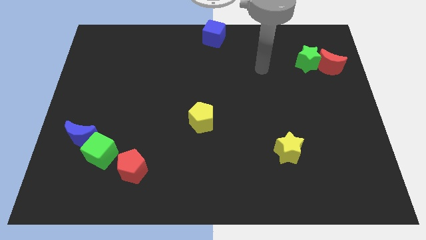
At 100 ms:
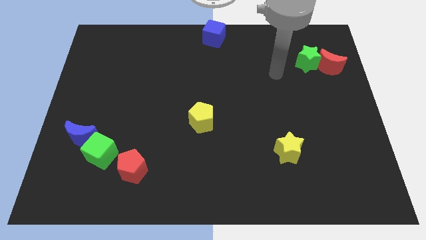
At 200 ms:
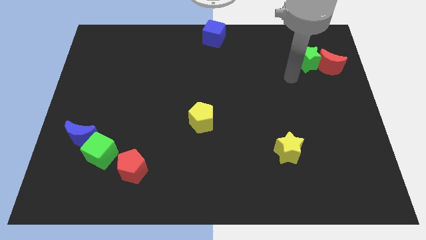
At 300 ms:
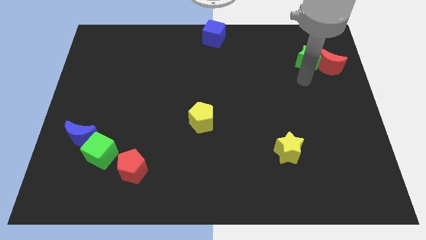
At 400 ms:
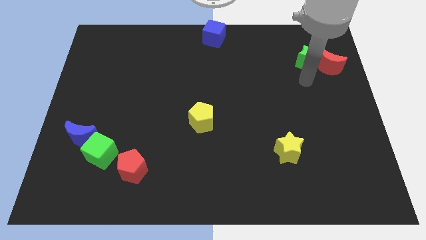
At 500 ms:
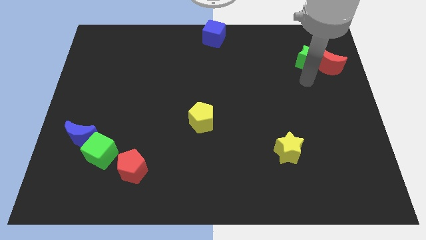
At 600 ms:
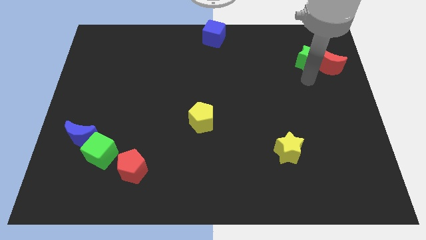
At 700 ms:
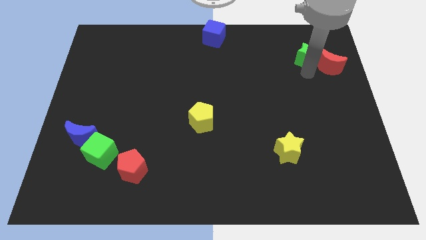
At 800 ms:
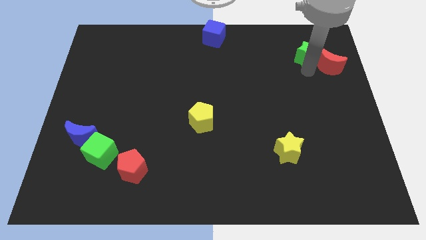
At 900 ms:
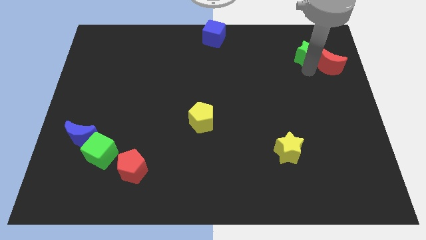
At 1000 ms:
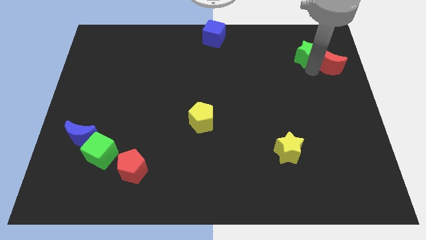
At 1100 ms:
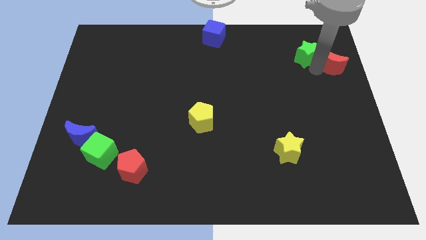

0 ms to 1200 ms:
touch the green star

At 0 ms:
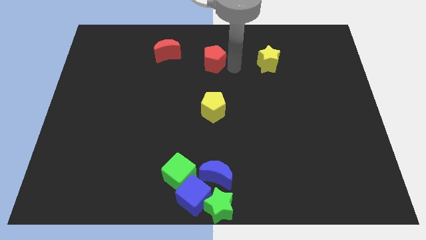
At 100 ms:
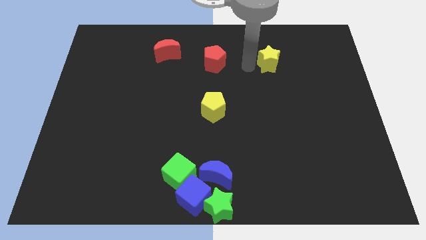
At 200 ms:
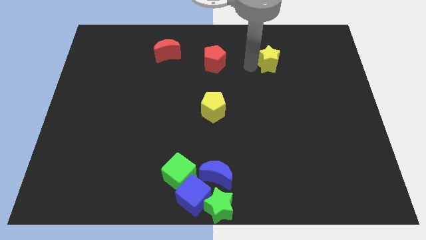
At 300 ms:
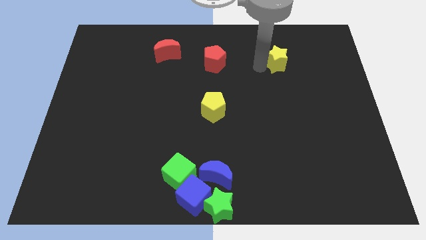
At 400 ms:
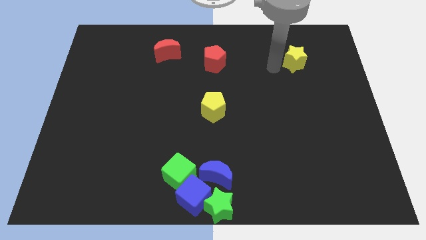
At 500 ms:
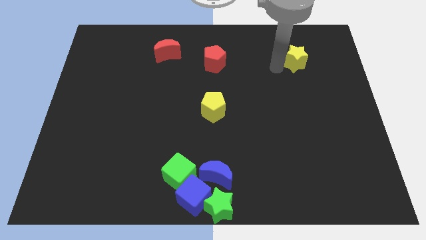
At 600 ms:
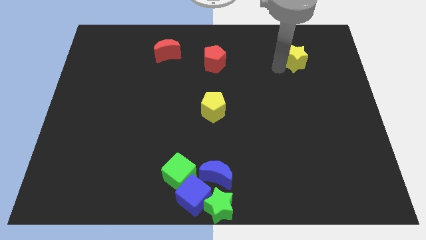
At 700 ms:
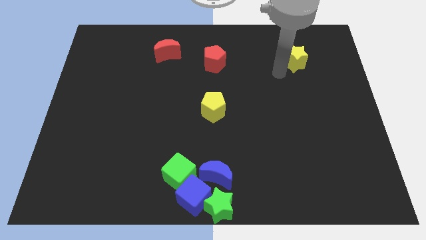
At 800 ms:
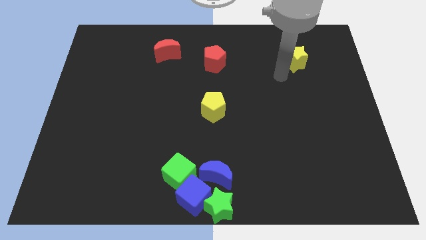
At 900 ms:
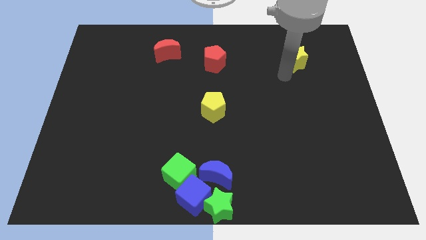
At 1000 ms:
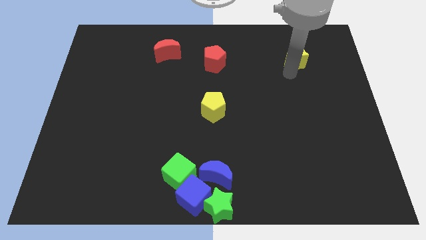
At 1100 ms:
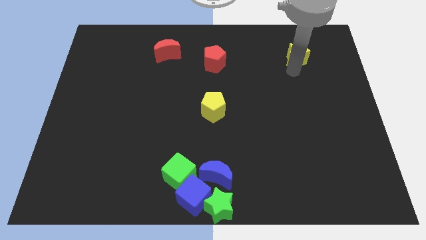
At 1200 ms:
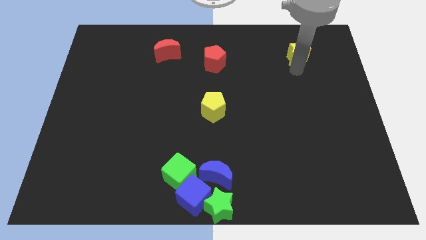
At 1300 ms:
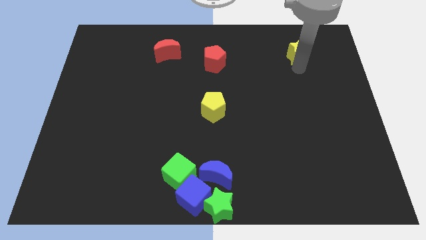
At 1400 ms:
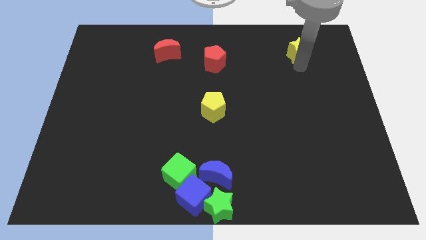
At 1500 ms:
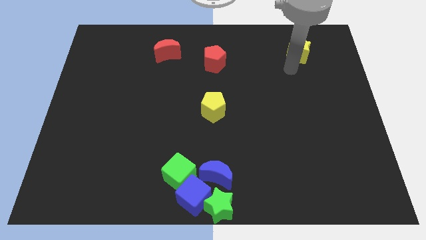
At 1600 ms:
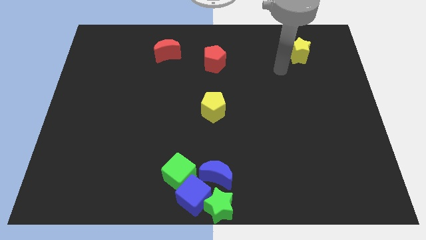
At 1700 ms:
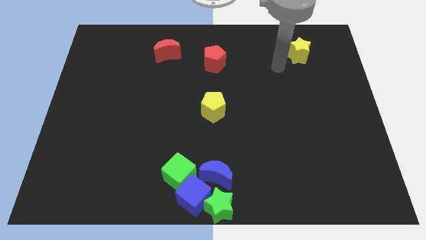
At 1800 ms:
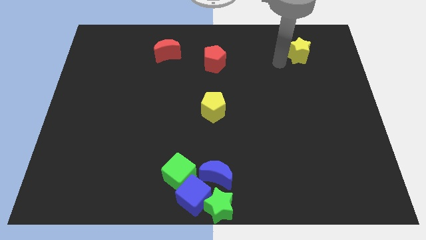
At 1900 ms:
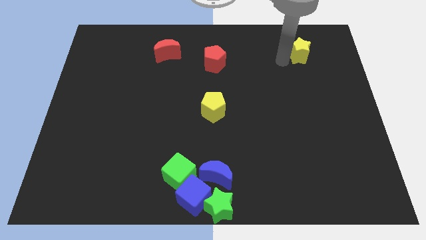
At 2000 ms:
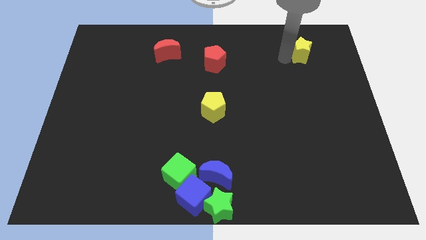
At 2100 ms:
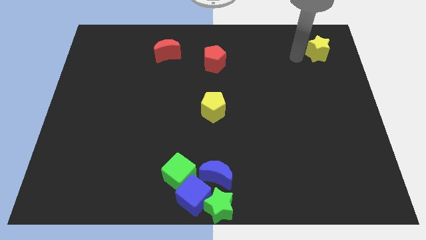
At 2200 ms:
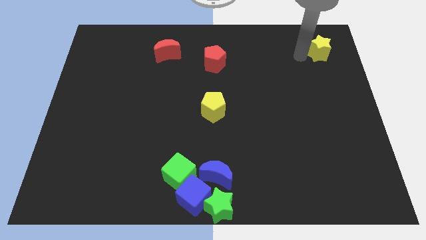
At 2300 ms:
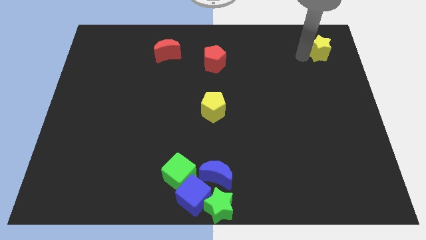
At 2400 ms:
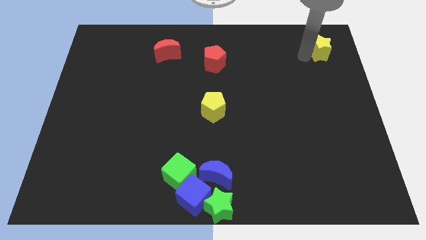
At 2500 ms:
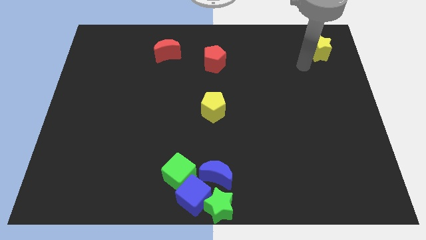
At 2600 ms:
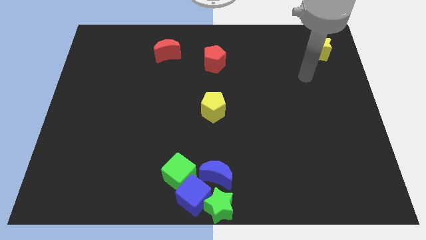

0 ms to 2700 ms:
place the yellow star in the top right

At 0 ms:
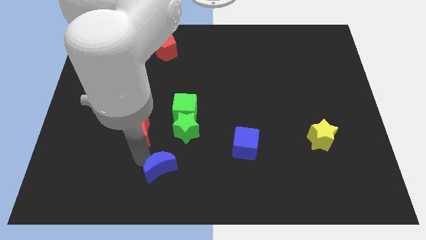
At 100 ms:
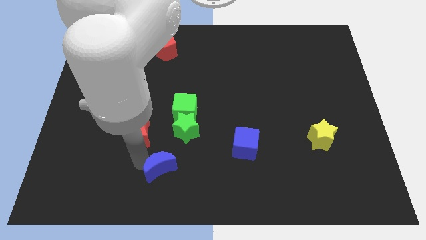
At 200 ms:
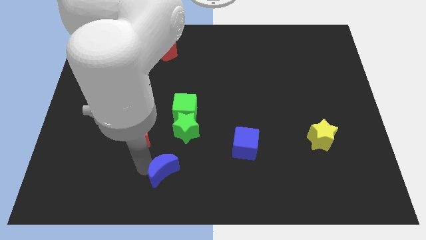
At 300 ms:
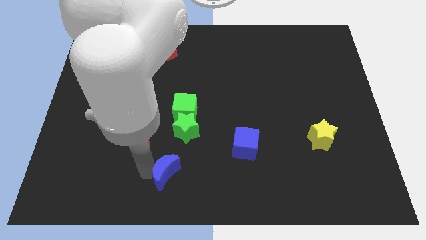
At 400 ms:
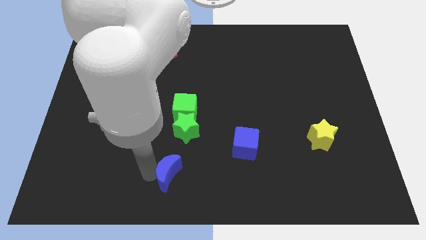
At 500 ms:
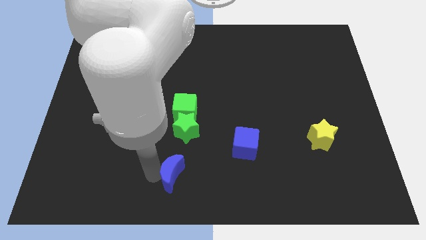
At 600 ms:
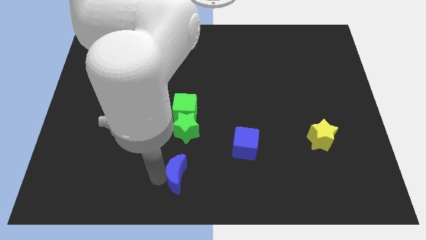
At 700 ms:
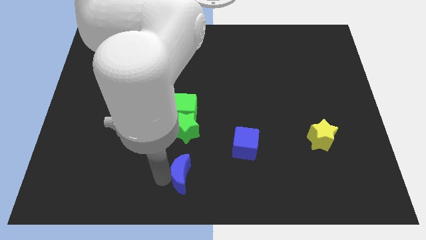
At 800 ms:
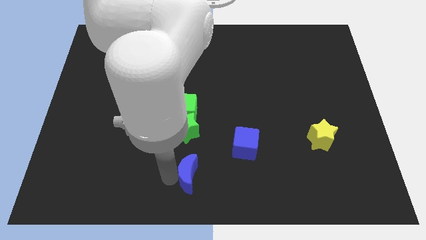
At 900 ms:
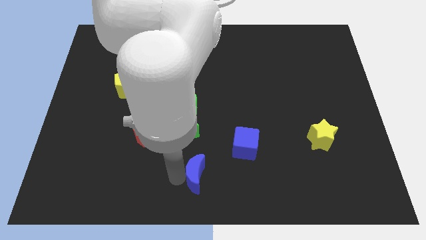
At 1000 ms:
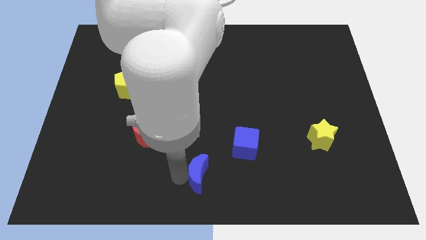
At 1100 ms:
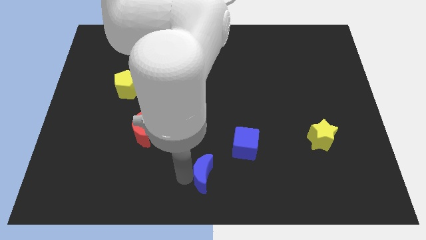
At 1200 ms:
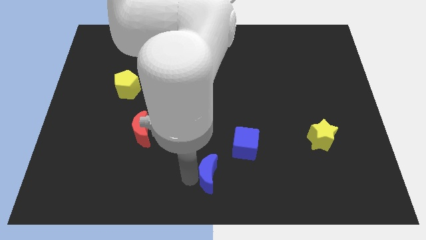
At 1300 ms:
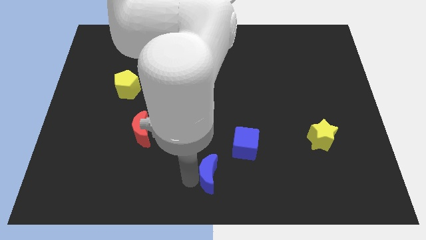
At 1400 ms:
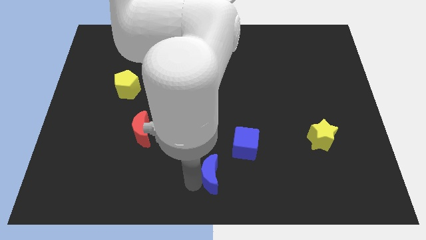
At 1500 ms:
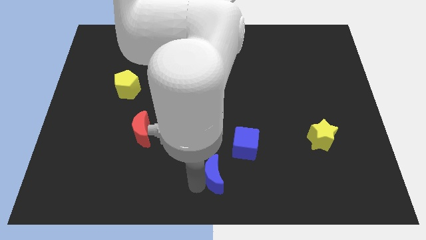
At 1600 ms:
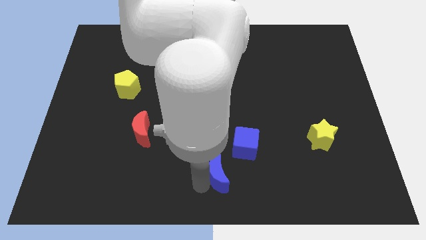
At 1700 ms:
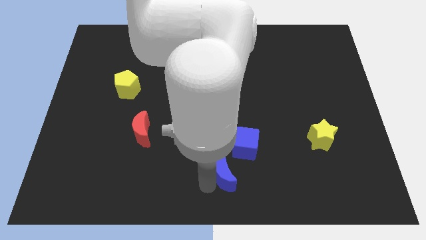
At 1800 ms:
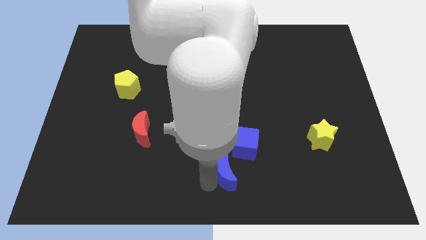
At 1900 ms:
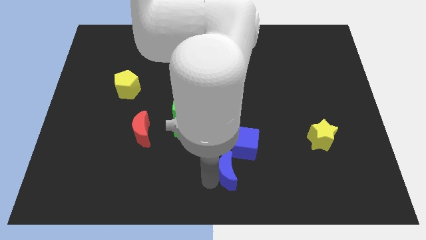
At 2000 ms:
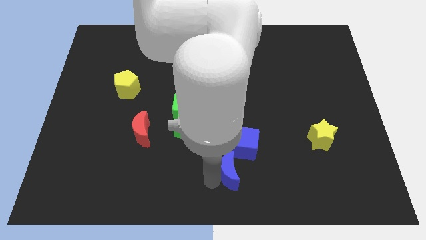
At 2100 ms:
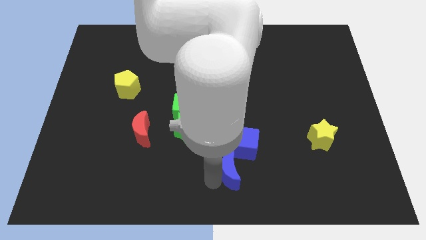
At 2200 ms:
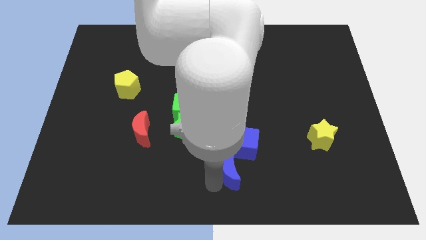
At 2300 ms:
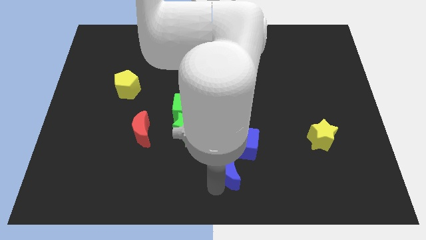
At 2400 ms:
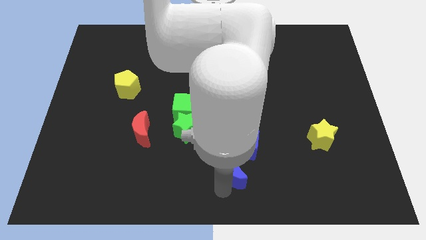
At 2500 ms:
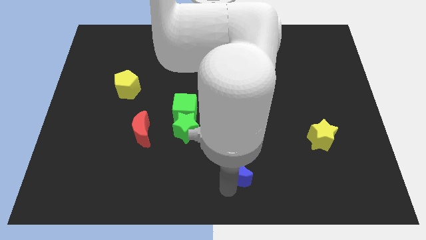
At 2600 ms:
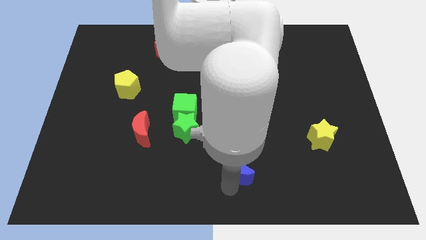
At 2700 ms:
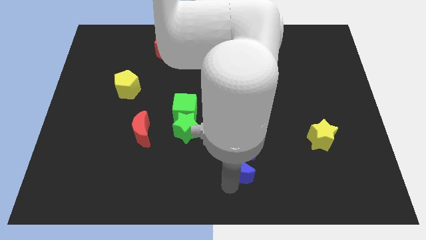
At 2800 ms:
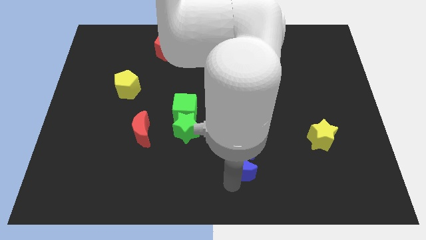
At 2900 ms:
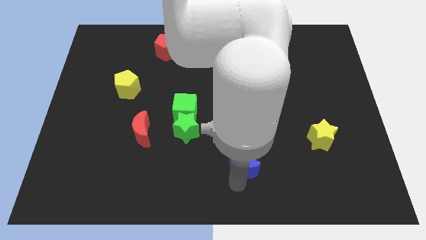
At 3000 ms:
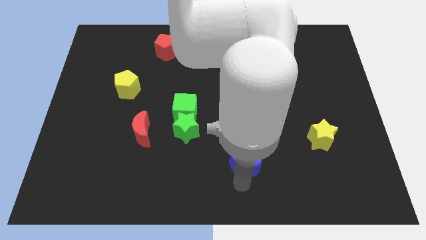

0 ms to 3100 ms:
push the blue crescent towards the blue cube

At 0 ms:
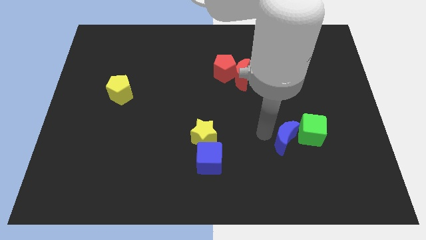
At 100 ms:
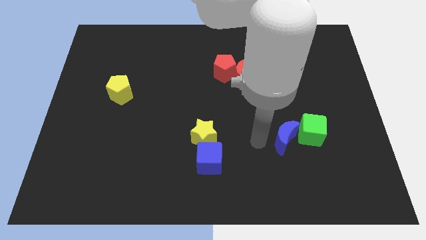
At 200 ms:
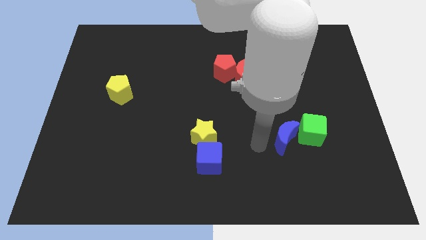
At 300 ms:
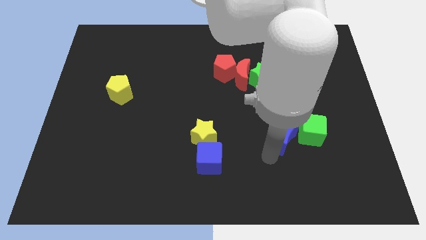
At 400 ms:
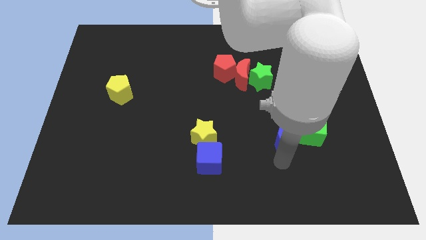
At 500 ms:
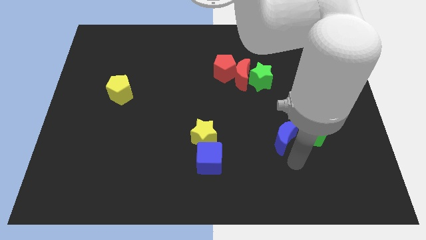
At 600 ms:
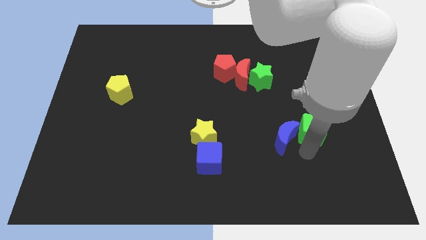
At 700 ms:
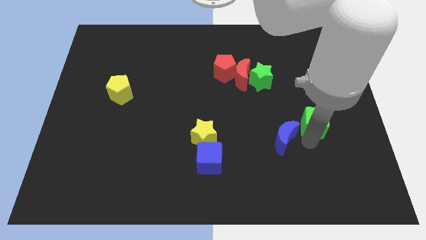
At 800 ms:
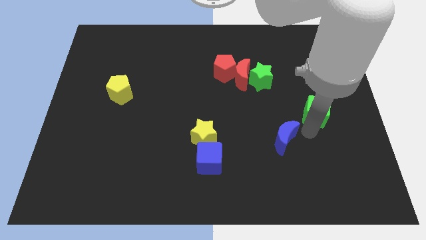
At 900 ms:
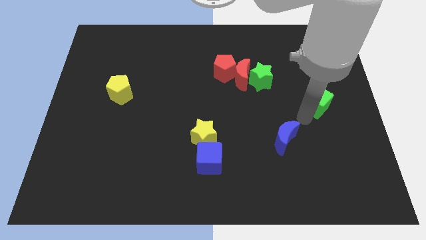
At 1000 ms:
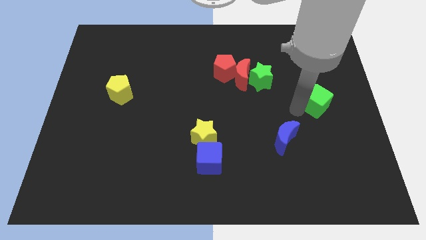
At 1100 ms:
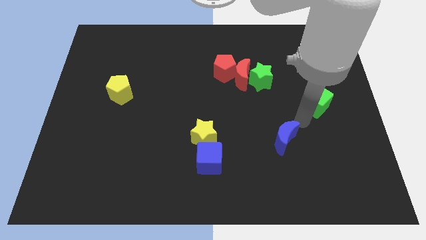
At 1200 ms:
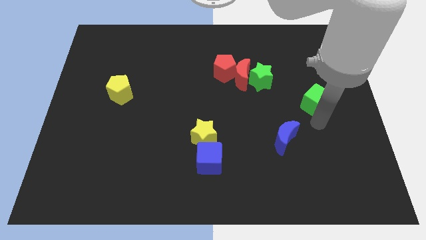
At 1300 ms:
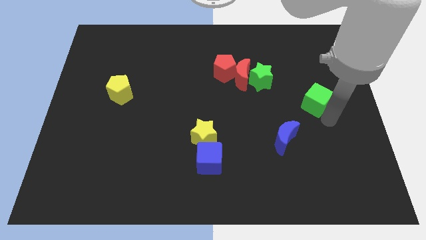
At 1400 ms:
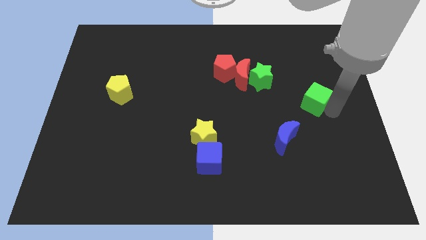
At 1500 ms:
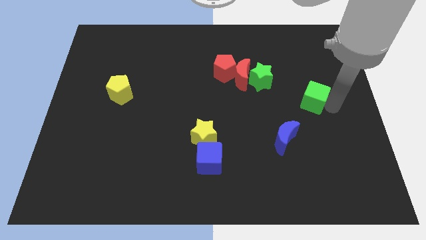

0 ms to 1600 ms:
separate green cube from the blue moon

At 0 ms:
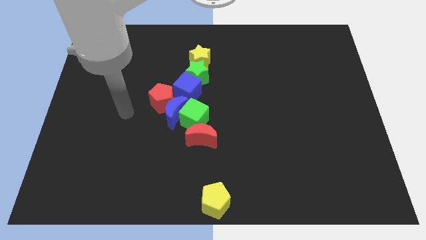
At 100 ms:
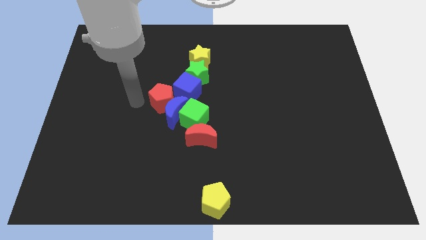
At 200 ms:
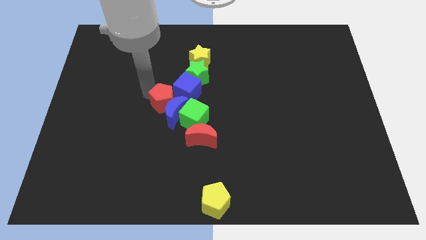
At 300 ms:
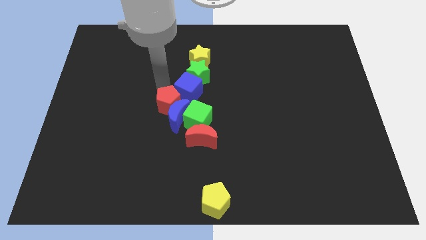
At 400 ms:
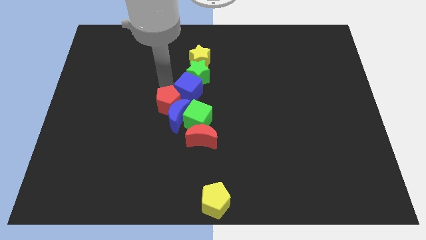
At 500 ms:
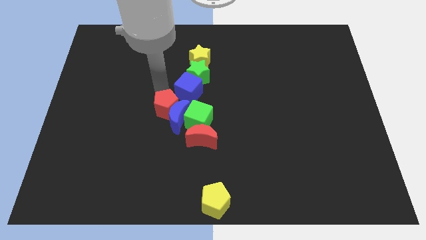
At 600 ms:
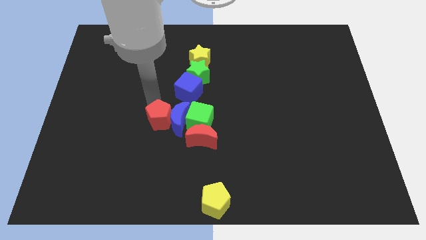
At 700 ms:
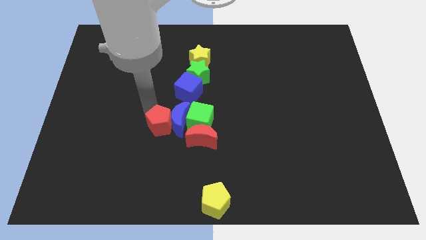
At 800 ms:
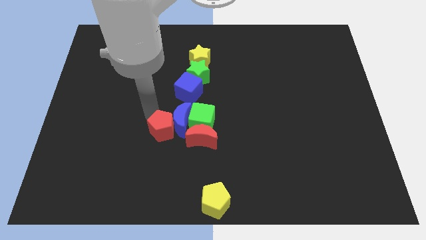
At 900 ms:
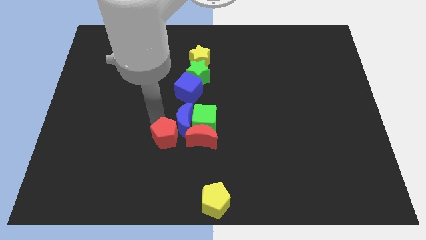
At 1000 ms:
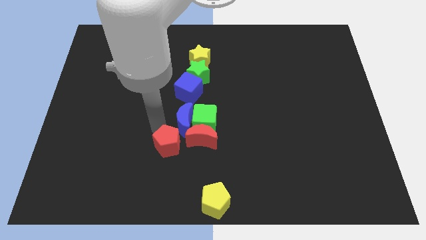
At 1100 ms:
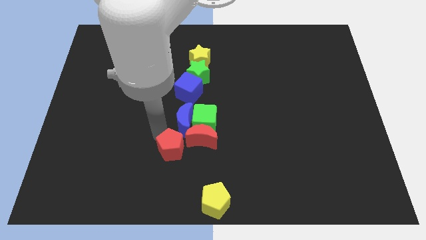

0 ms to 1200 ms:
push red pentagon to the left of red moon
